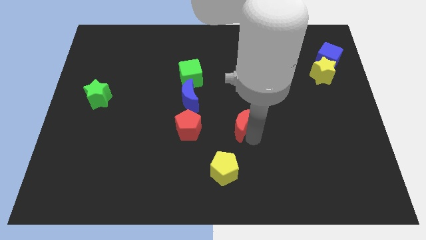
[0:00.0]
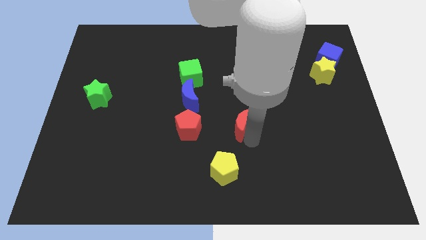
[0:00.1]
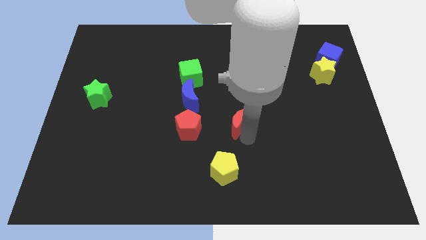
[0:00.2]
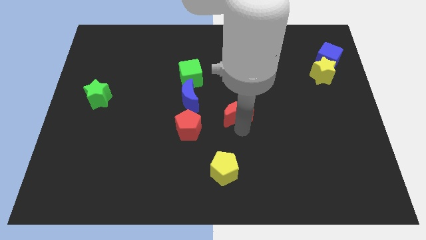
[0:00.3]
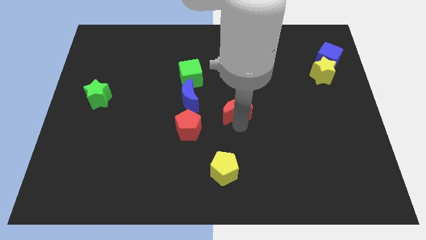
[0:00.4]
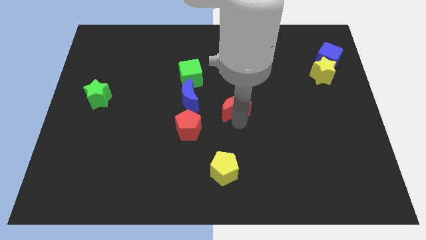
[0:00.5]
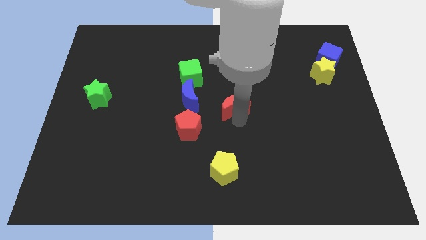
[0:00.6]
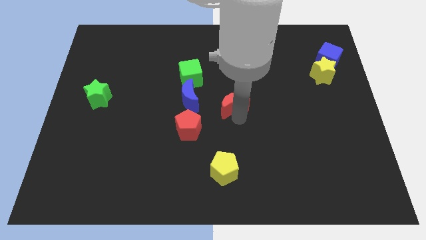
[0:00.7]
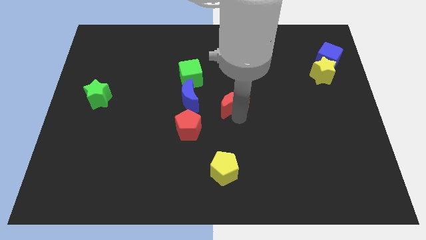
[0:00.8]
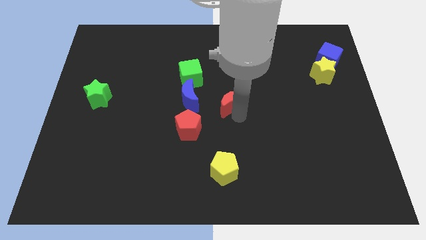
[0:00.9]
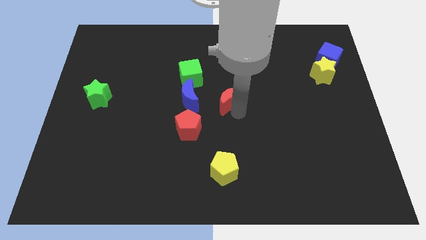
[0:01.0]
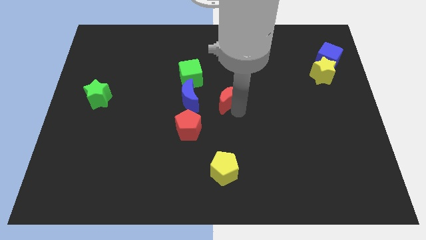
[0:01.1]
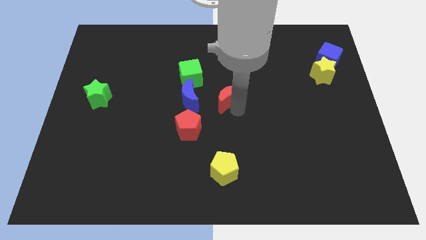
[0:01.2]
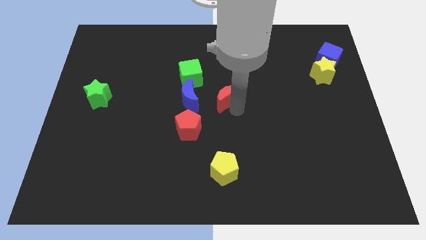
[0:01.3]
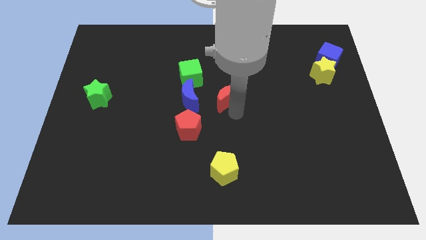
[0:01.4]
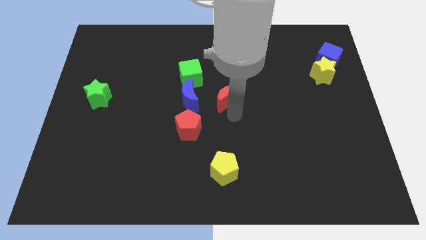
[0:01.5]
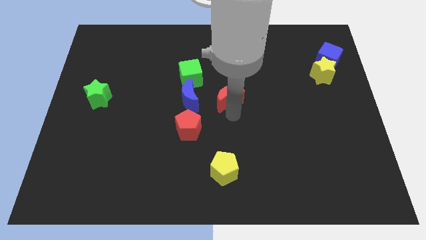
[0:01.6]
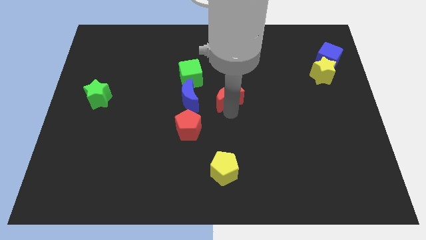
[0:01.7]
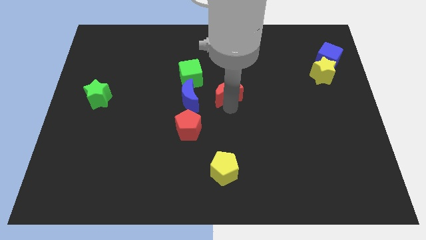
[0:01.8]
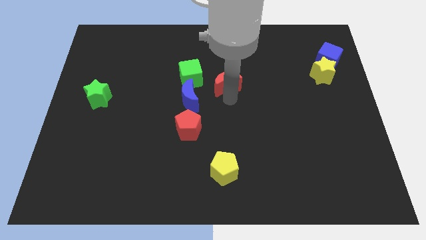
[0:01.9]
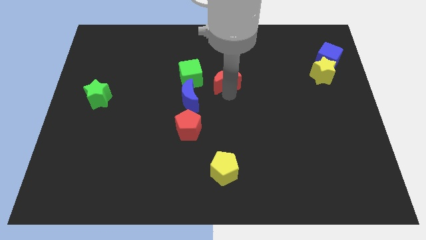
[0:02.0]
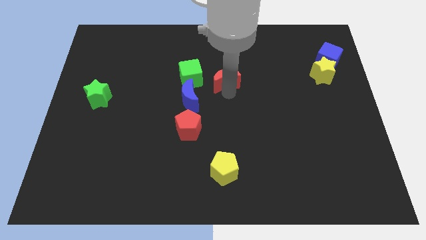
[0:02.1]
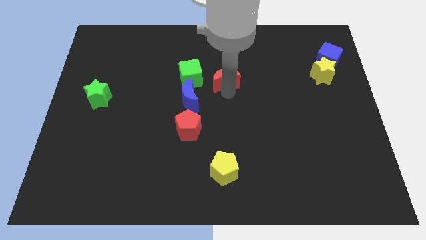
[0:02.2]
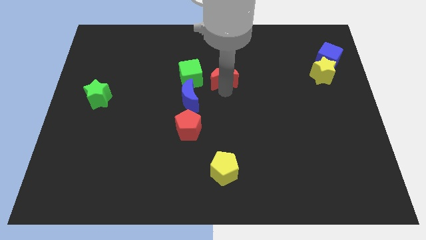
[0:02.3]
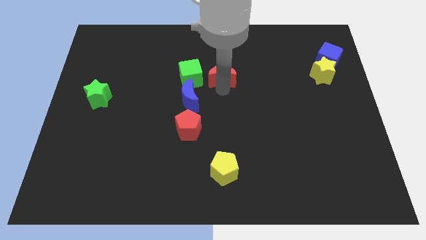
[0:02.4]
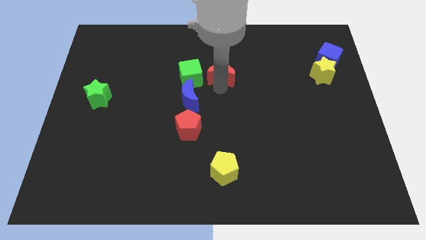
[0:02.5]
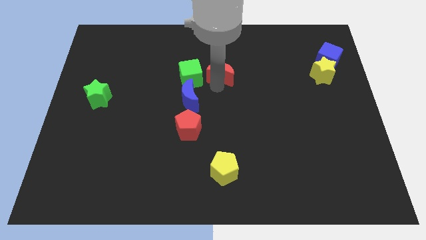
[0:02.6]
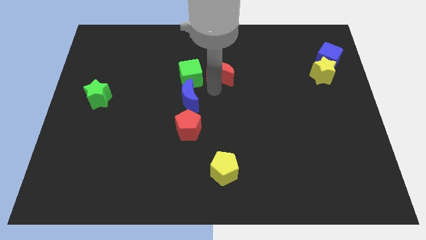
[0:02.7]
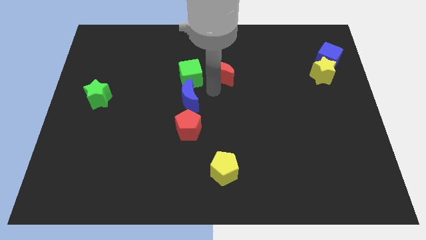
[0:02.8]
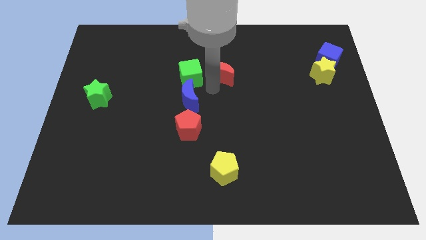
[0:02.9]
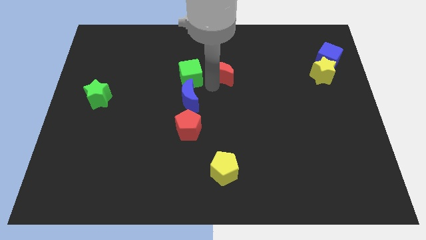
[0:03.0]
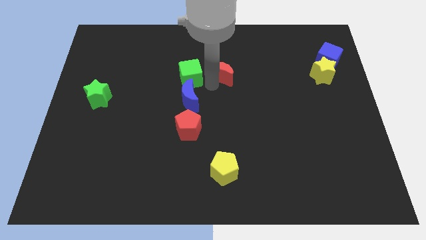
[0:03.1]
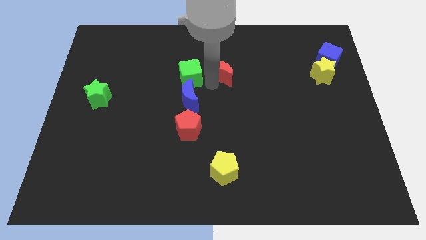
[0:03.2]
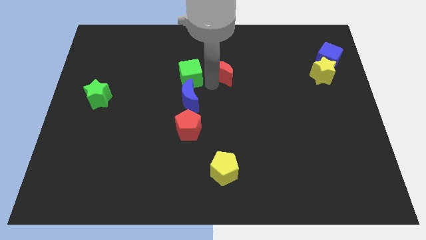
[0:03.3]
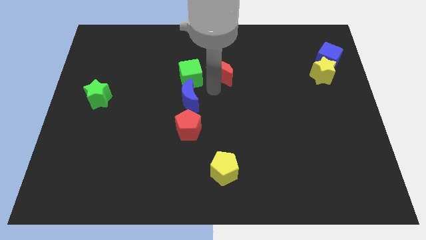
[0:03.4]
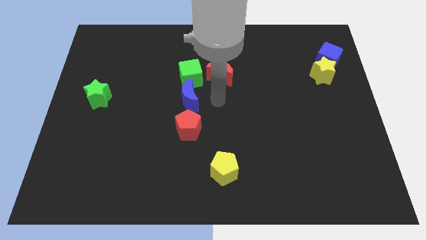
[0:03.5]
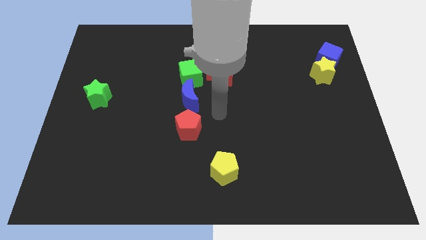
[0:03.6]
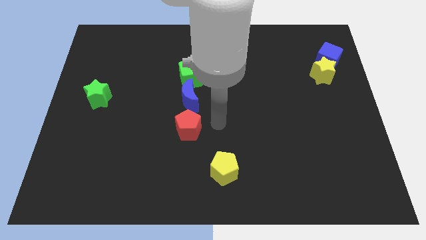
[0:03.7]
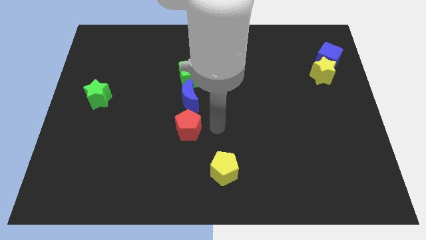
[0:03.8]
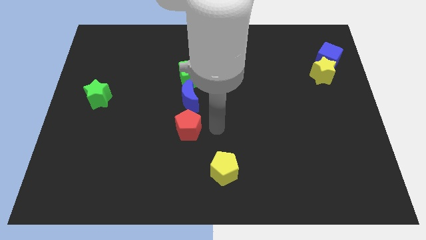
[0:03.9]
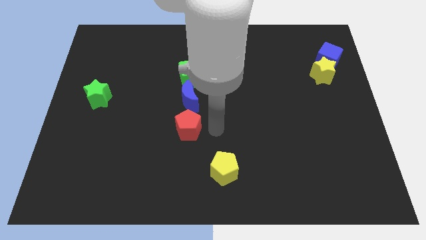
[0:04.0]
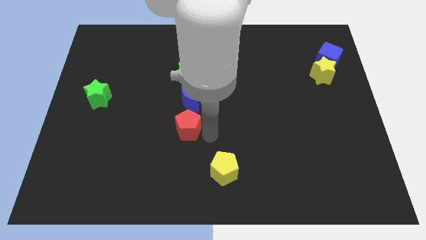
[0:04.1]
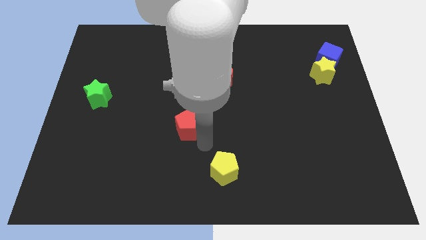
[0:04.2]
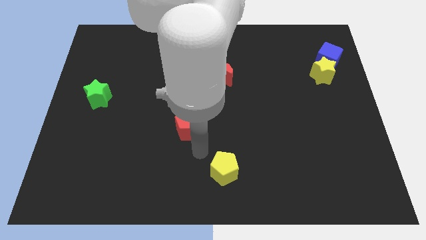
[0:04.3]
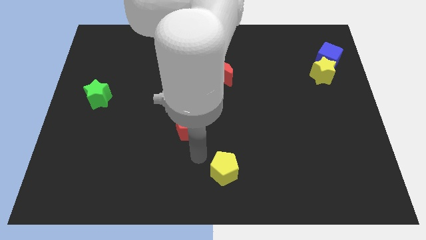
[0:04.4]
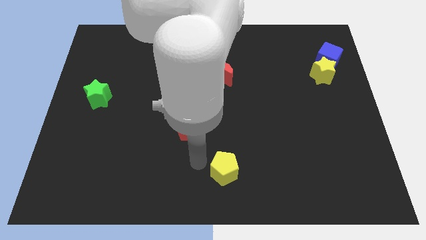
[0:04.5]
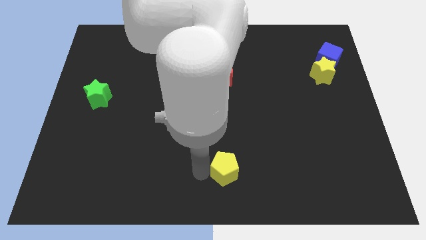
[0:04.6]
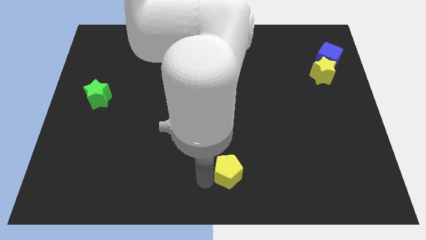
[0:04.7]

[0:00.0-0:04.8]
place red crescent to the right side of the green cube

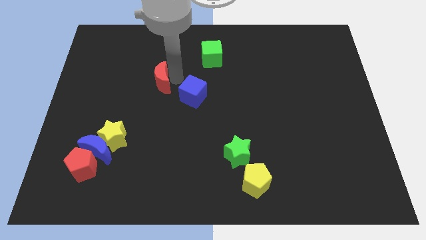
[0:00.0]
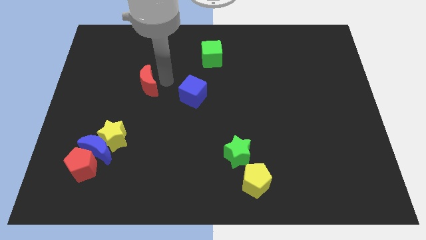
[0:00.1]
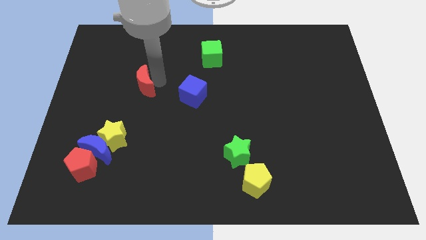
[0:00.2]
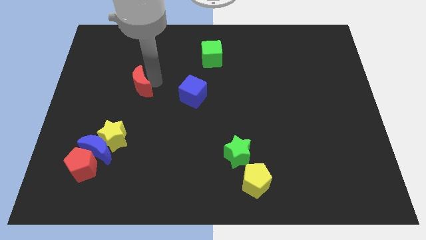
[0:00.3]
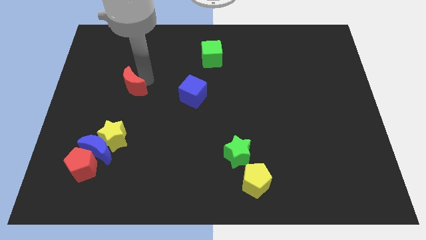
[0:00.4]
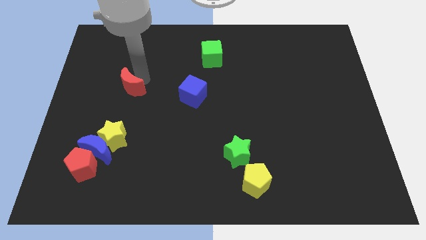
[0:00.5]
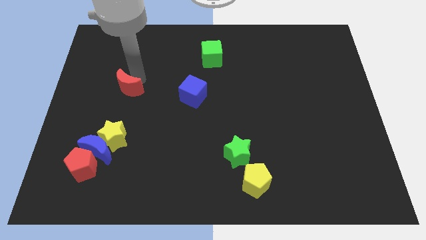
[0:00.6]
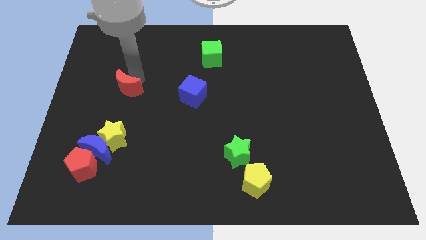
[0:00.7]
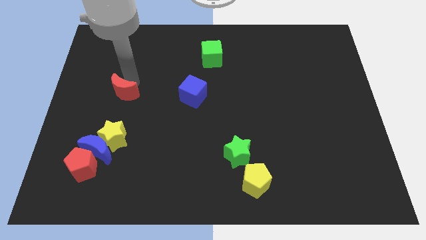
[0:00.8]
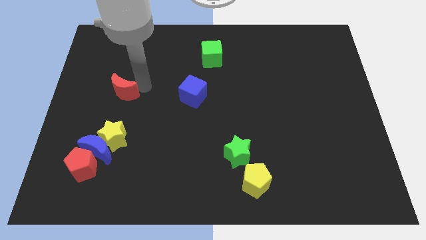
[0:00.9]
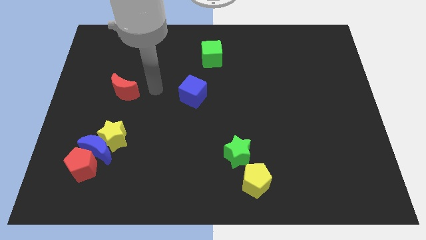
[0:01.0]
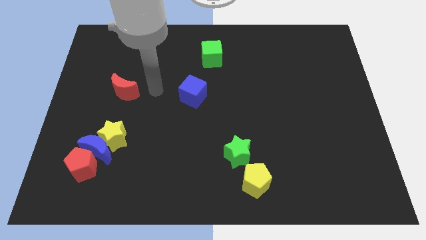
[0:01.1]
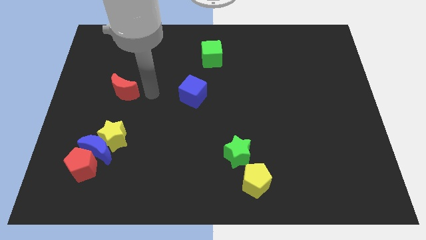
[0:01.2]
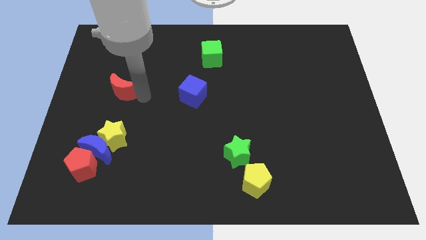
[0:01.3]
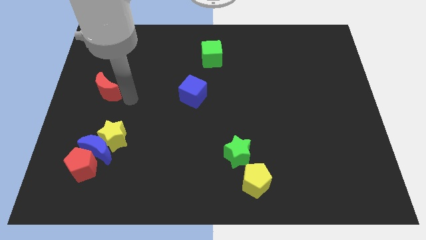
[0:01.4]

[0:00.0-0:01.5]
push red crescent above yellow star

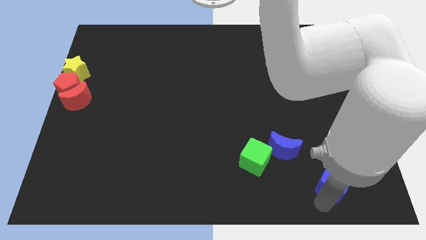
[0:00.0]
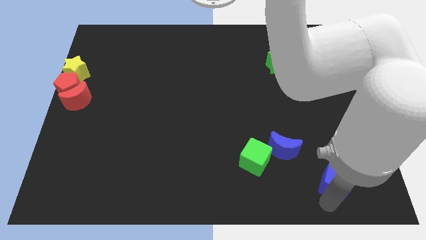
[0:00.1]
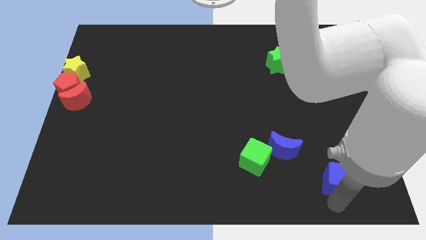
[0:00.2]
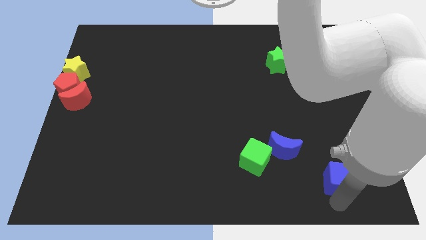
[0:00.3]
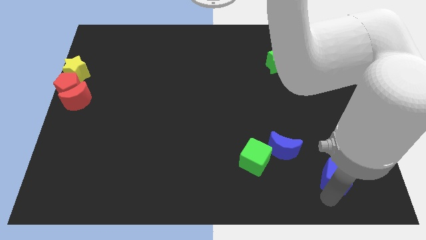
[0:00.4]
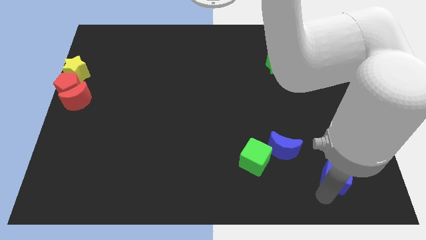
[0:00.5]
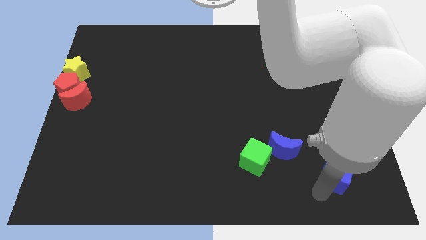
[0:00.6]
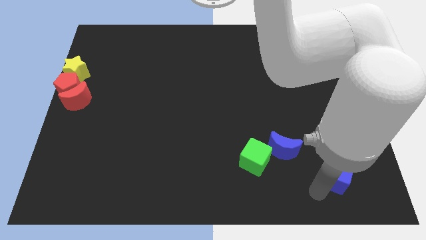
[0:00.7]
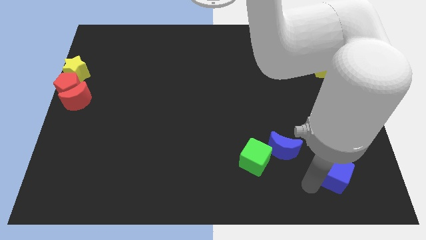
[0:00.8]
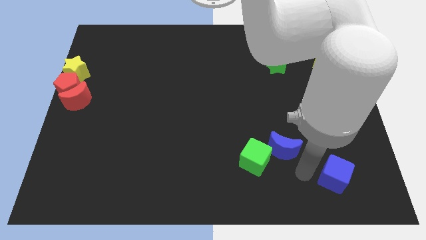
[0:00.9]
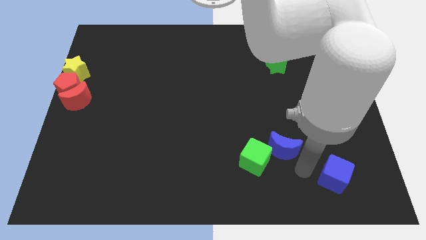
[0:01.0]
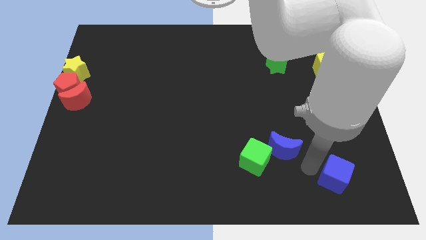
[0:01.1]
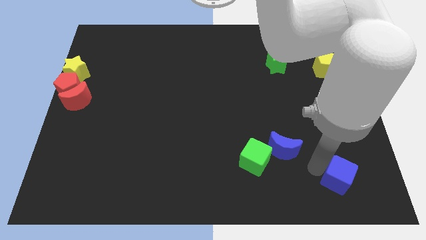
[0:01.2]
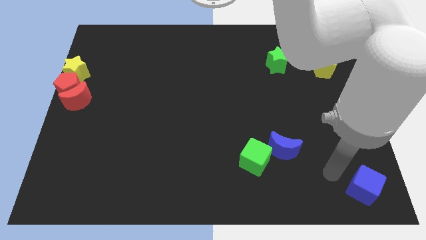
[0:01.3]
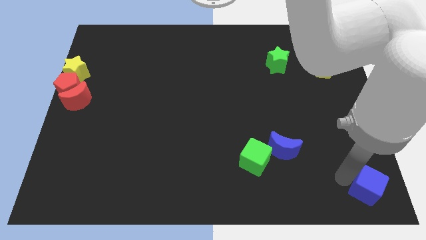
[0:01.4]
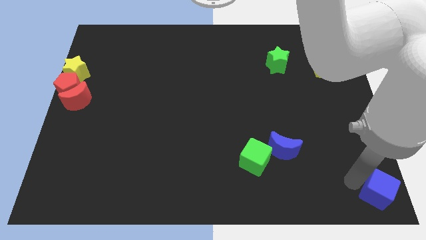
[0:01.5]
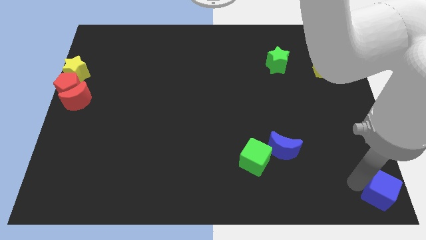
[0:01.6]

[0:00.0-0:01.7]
push the blue cube to the bottom right of the board

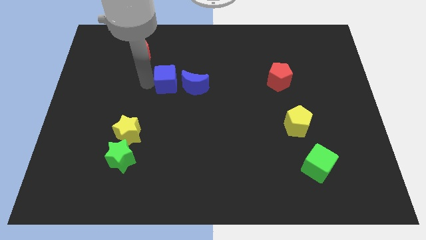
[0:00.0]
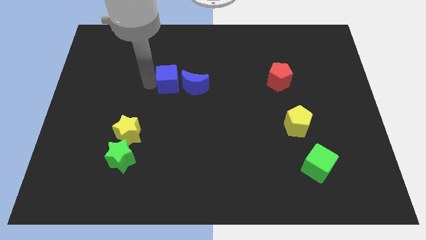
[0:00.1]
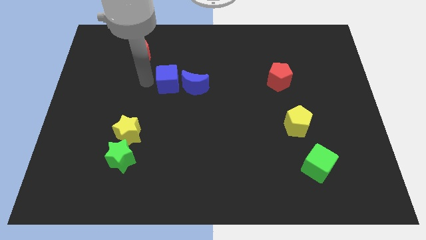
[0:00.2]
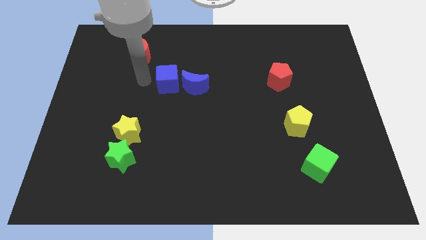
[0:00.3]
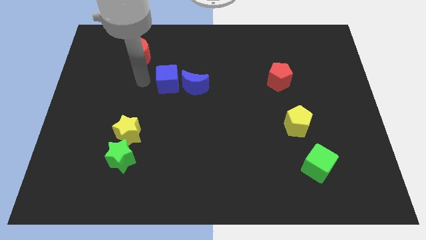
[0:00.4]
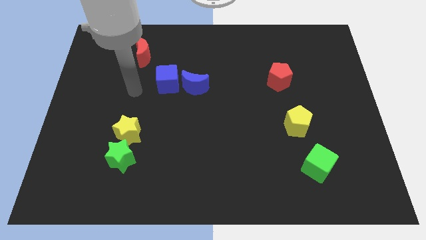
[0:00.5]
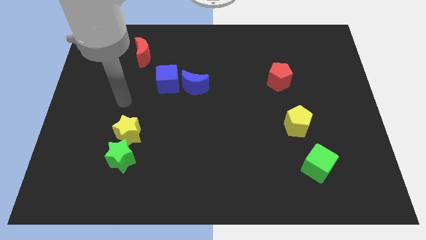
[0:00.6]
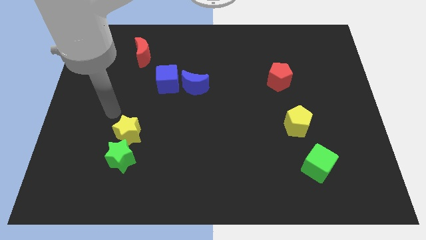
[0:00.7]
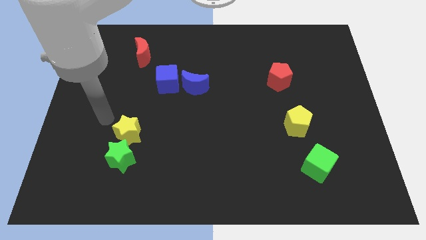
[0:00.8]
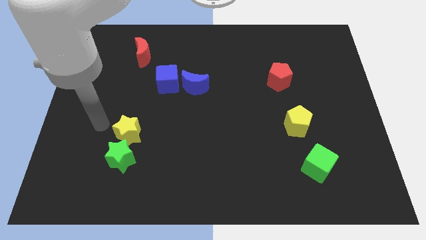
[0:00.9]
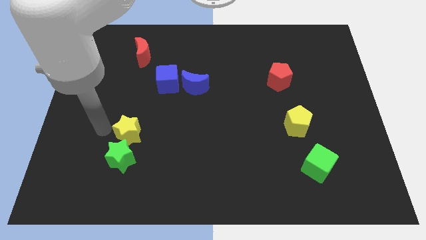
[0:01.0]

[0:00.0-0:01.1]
move your arm left to the yellow star
